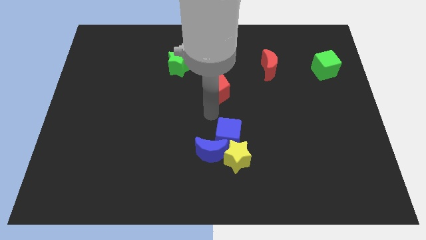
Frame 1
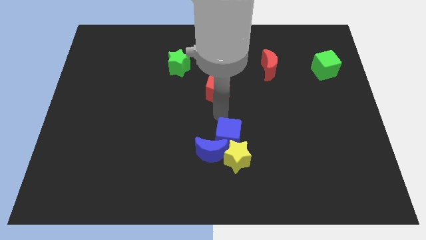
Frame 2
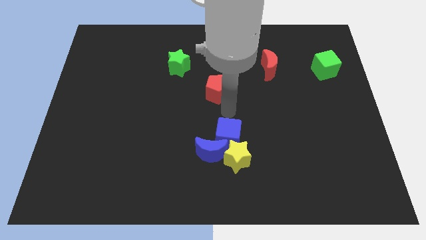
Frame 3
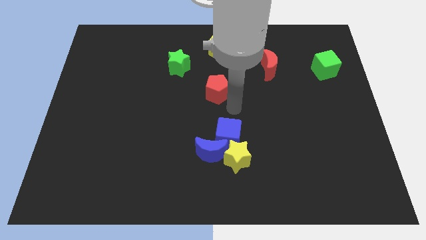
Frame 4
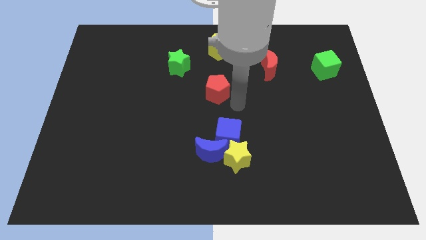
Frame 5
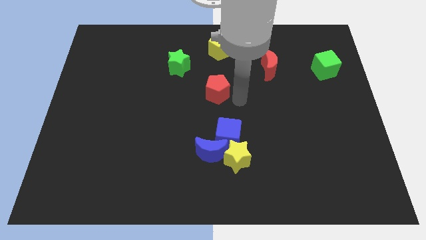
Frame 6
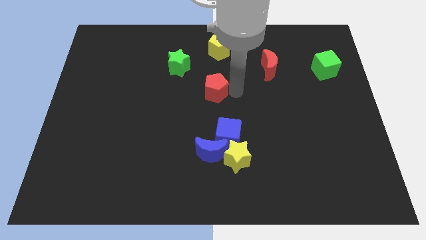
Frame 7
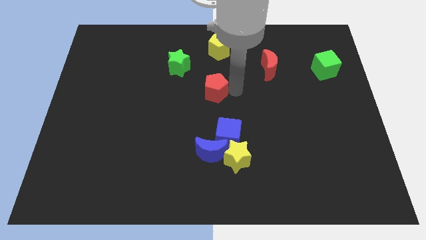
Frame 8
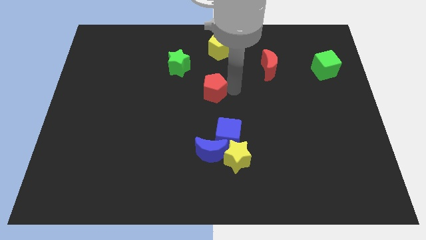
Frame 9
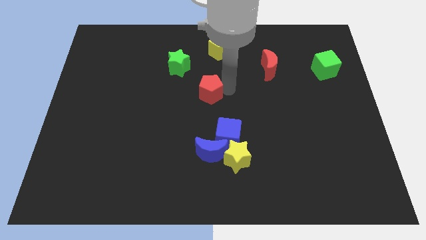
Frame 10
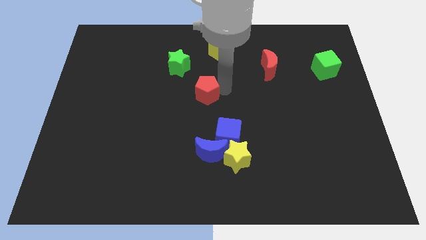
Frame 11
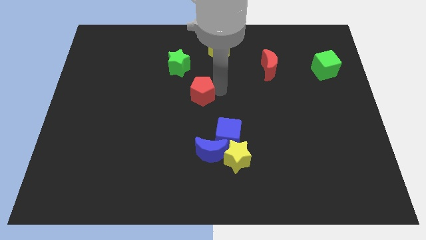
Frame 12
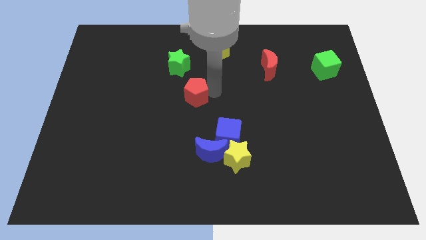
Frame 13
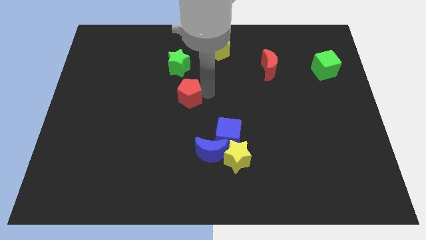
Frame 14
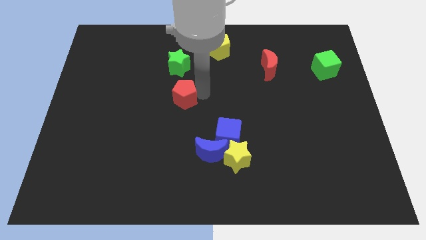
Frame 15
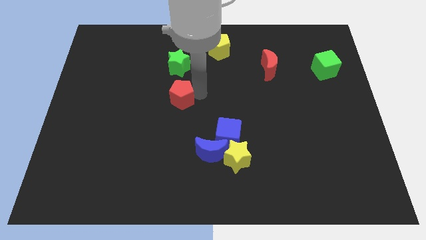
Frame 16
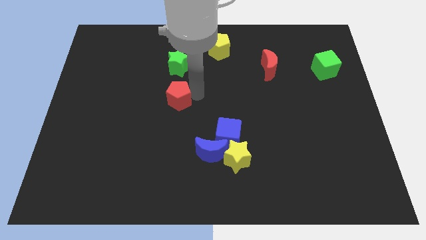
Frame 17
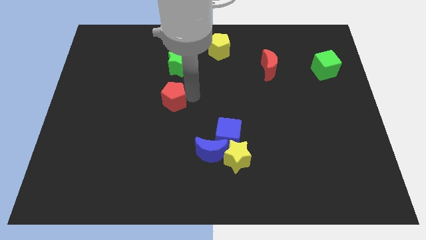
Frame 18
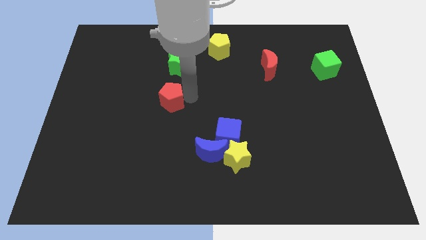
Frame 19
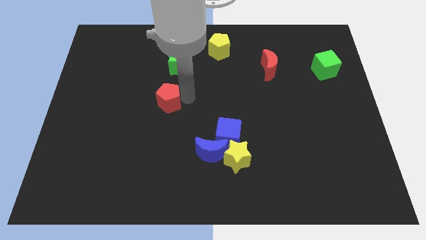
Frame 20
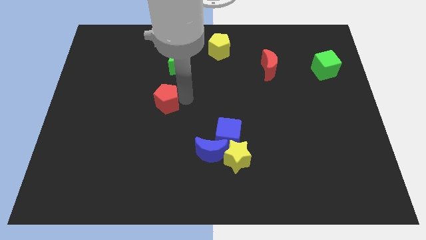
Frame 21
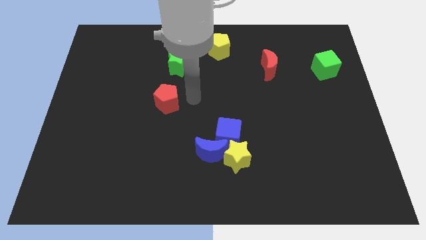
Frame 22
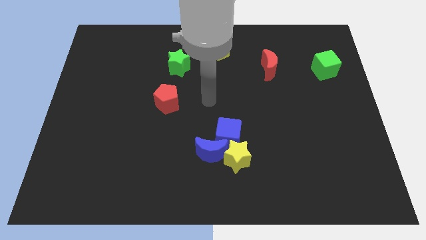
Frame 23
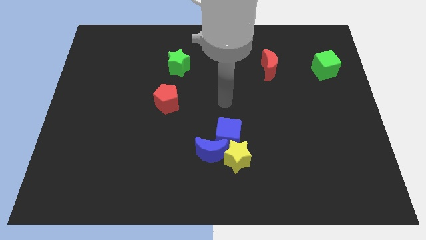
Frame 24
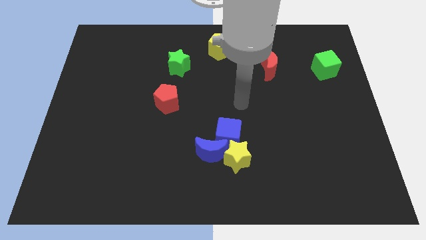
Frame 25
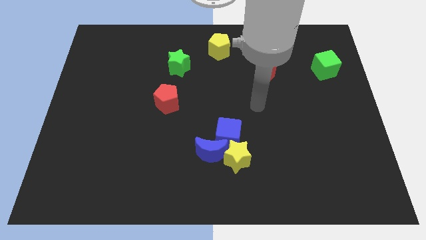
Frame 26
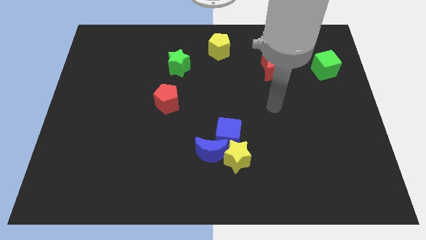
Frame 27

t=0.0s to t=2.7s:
place the red pentagon diagonally to the green star

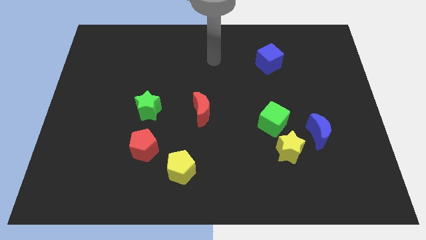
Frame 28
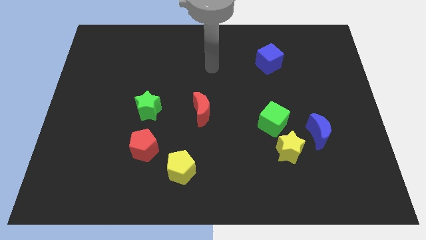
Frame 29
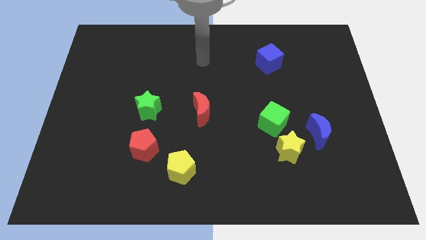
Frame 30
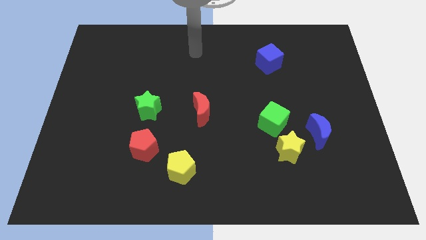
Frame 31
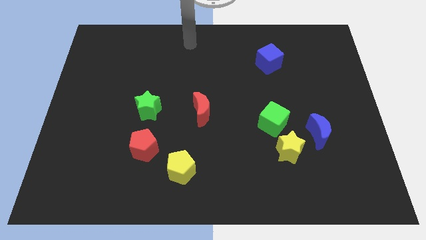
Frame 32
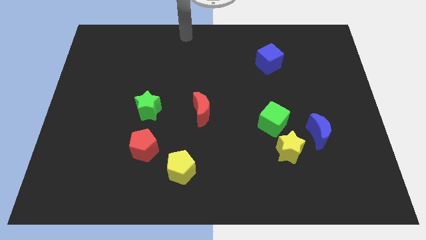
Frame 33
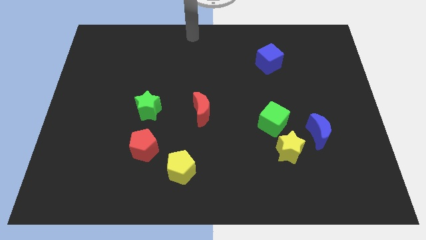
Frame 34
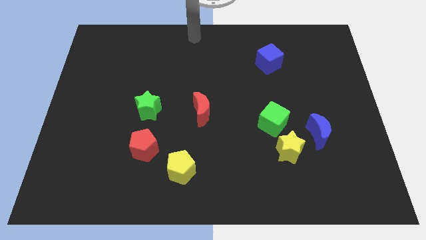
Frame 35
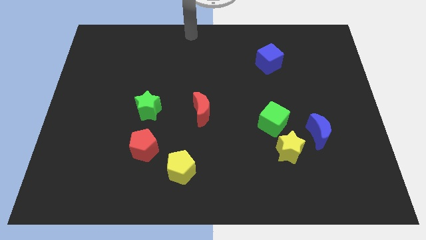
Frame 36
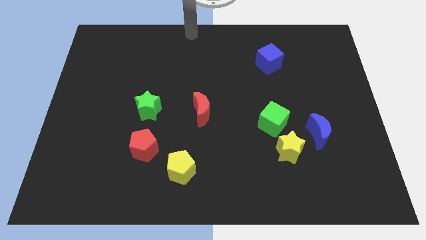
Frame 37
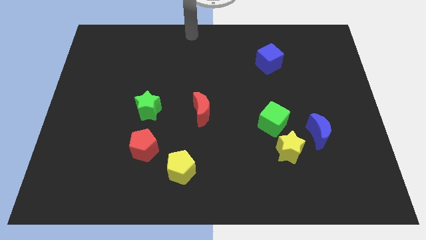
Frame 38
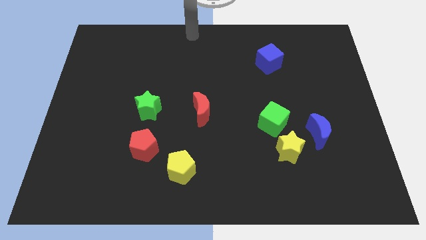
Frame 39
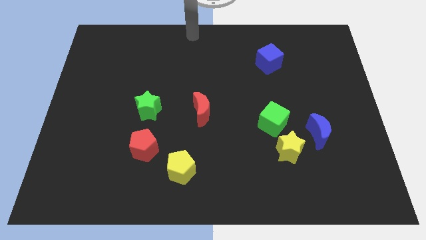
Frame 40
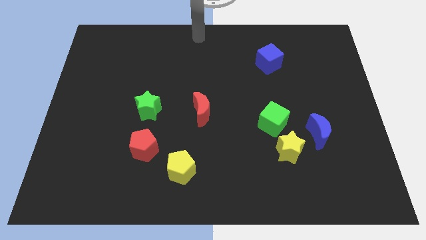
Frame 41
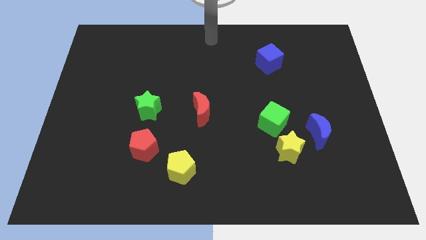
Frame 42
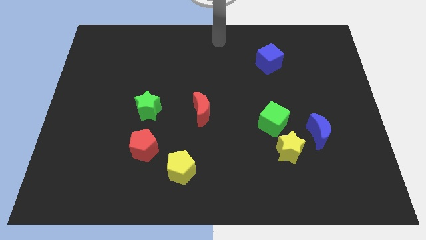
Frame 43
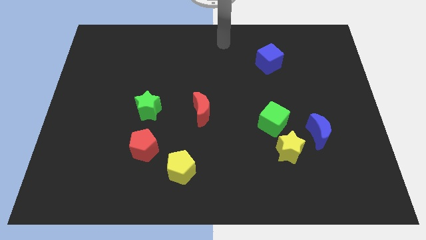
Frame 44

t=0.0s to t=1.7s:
place your arm at the top center of the board

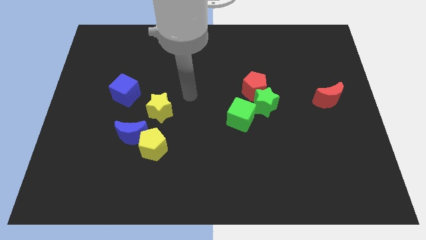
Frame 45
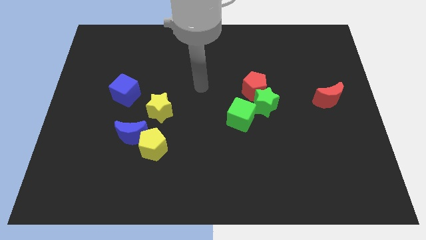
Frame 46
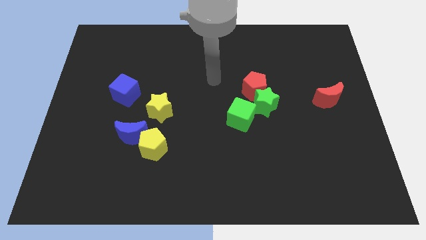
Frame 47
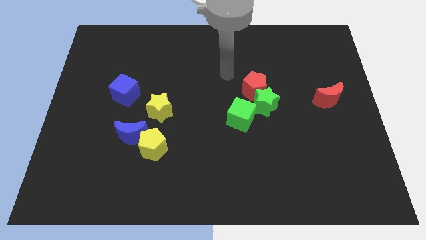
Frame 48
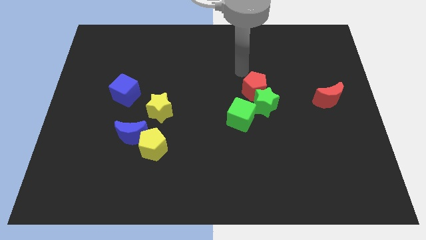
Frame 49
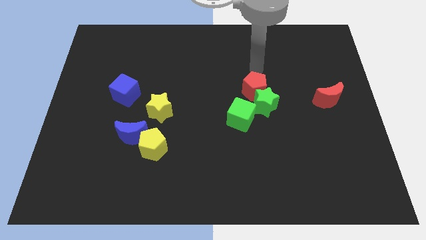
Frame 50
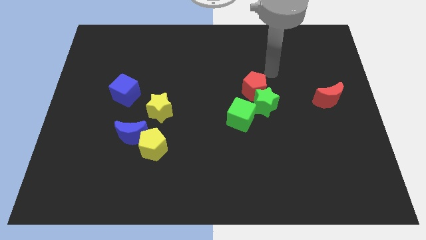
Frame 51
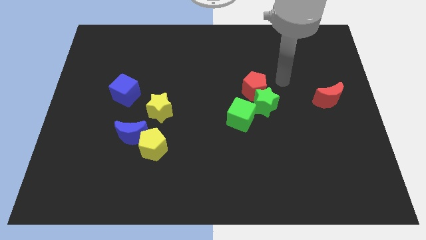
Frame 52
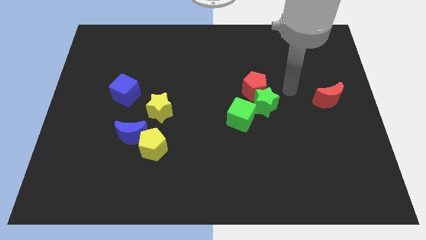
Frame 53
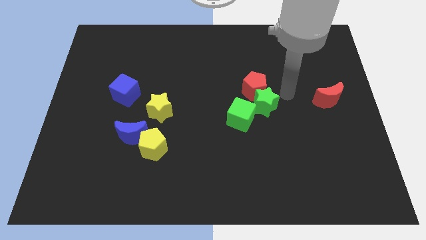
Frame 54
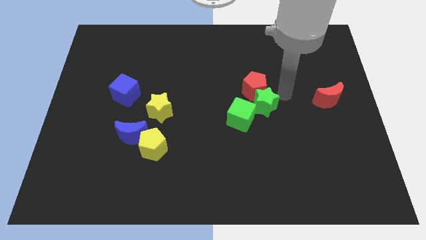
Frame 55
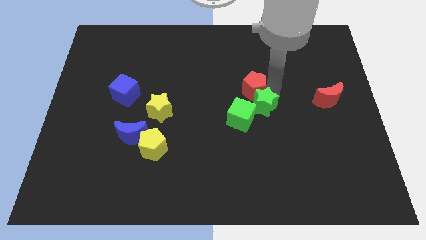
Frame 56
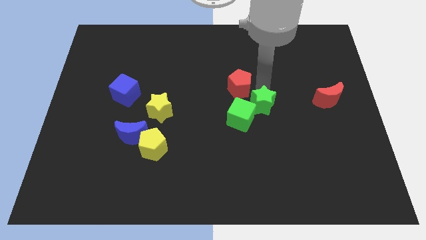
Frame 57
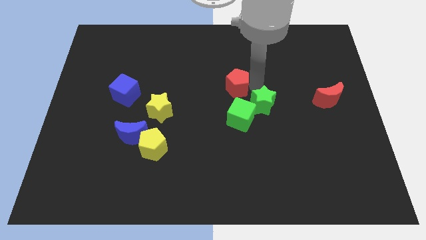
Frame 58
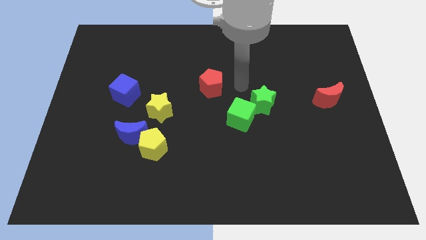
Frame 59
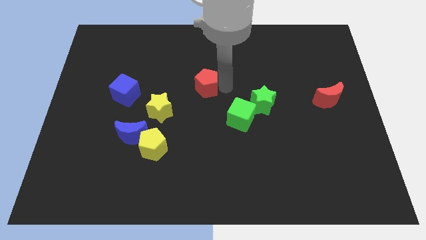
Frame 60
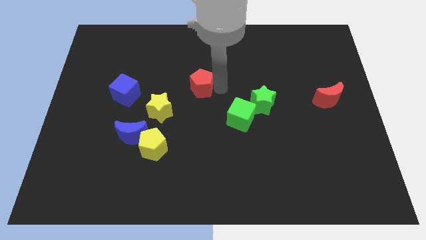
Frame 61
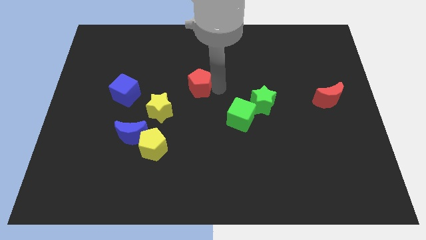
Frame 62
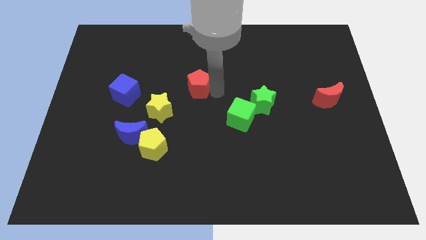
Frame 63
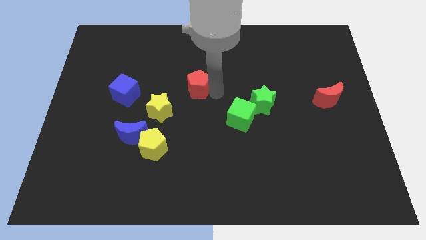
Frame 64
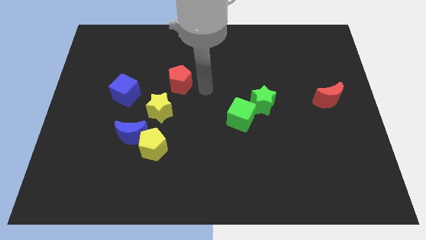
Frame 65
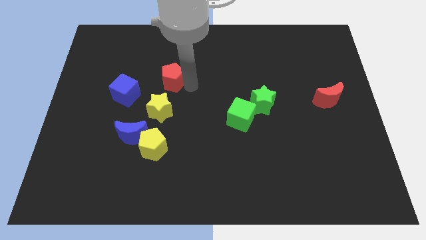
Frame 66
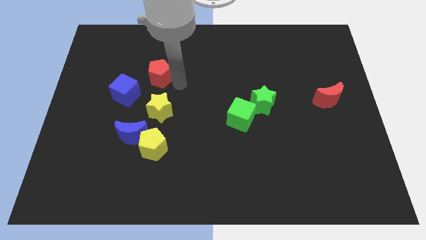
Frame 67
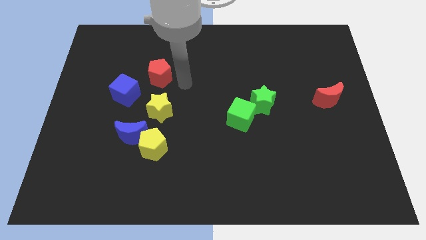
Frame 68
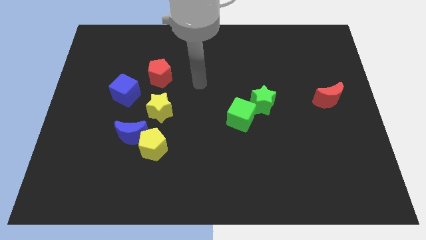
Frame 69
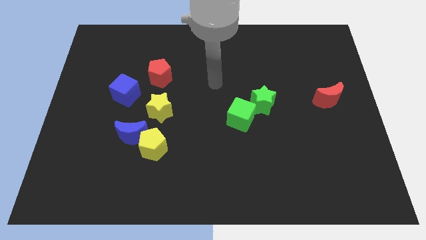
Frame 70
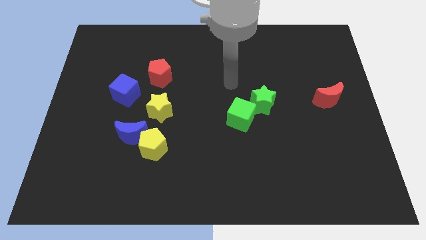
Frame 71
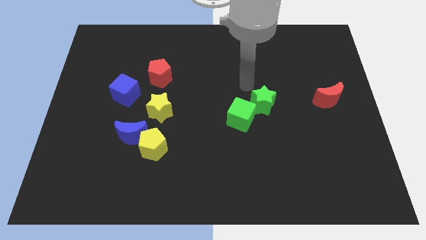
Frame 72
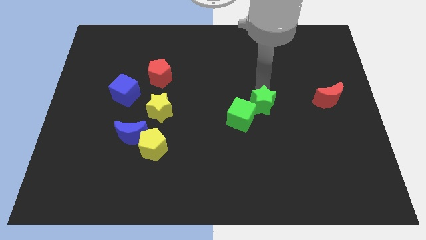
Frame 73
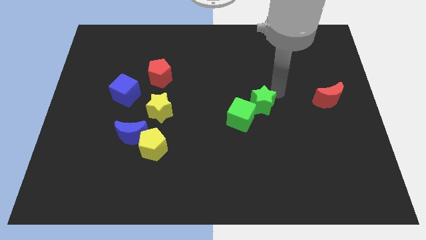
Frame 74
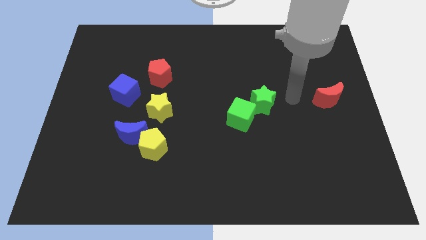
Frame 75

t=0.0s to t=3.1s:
push red pentagon above blue cube

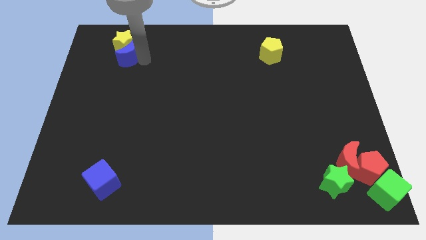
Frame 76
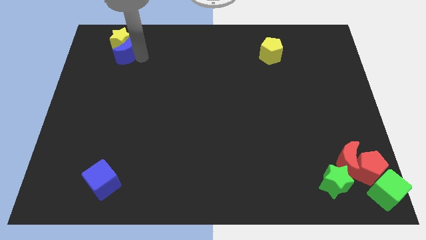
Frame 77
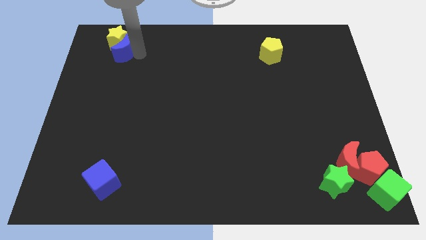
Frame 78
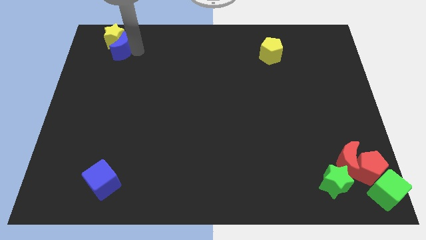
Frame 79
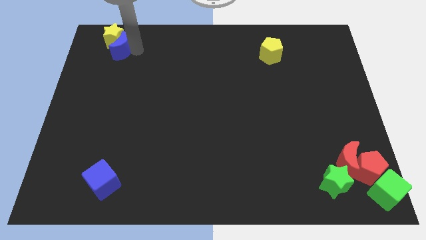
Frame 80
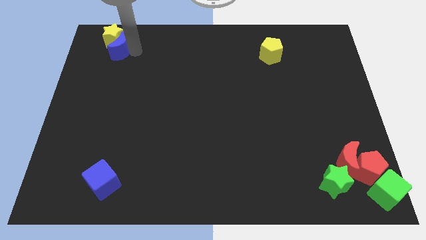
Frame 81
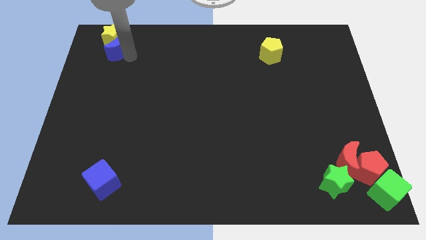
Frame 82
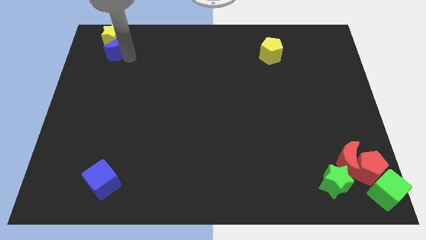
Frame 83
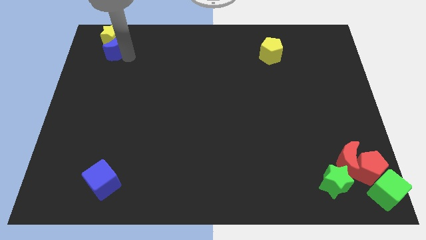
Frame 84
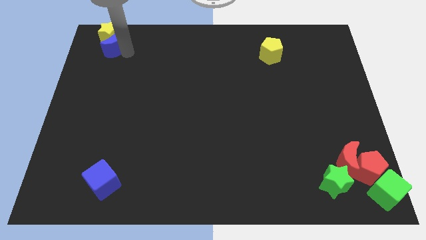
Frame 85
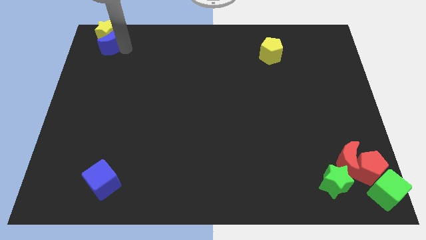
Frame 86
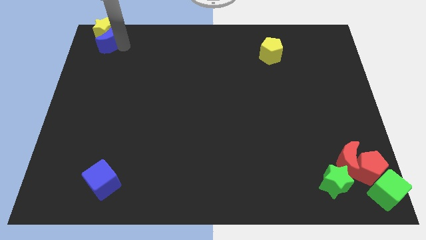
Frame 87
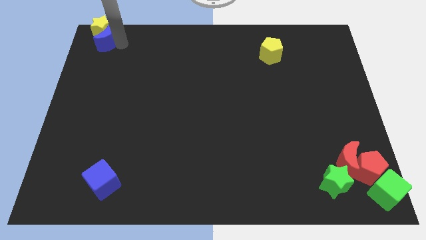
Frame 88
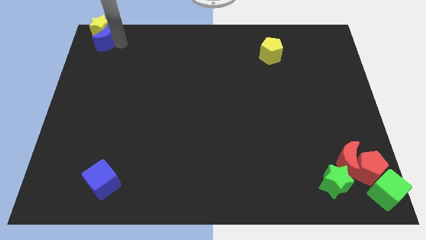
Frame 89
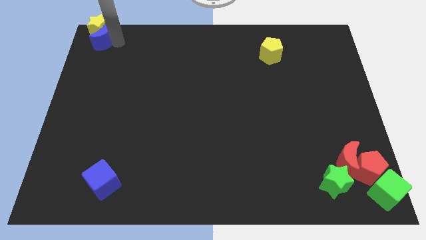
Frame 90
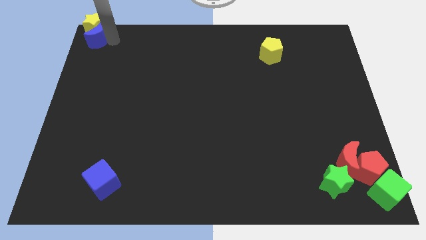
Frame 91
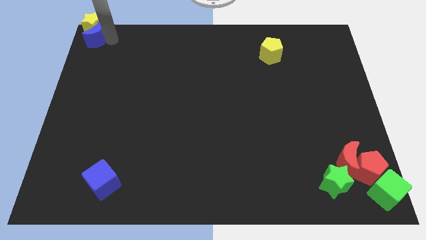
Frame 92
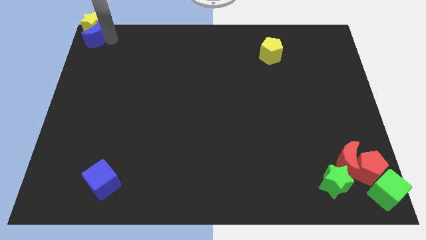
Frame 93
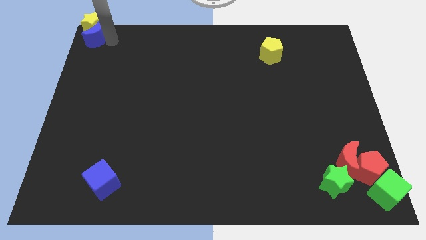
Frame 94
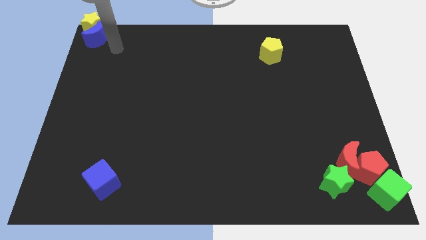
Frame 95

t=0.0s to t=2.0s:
move the blue moon and yellow star at the top left corner
